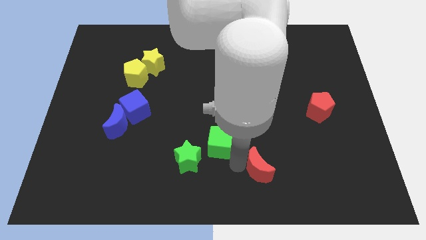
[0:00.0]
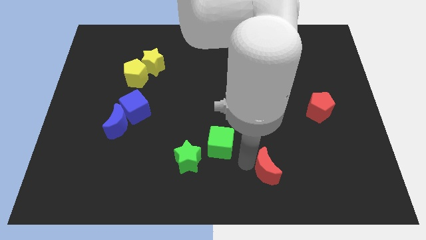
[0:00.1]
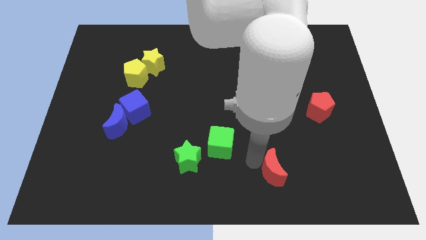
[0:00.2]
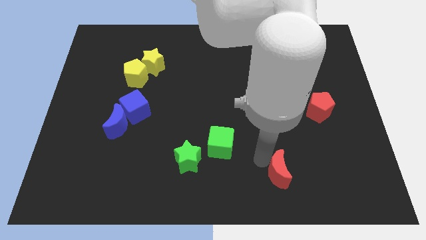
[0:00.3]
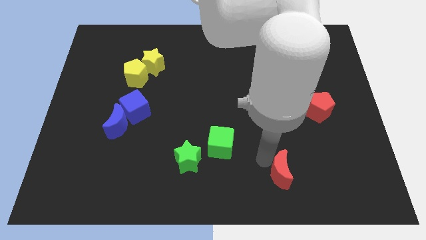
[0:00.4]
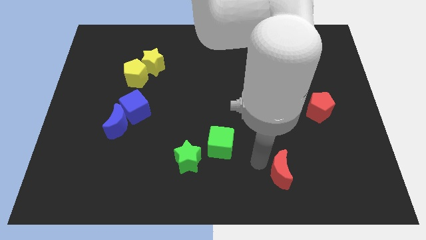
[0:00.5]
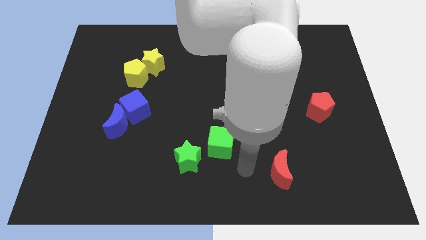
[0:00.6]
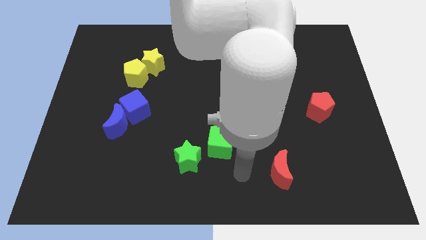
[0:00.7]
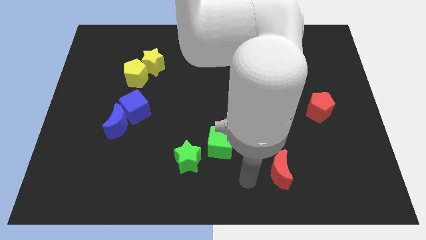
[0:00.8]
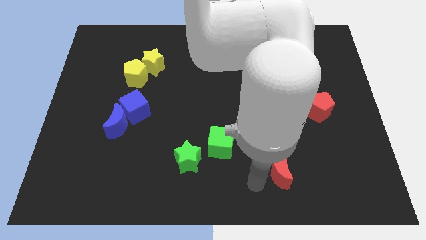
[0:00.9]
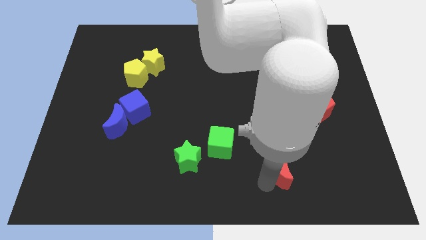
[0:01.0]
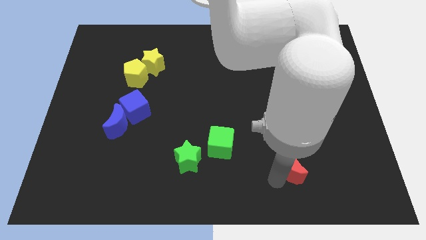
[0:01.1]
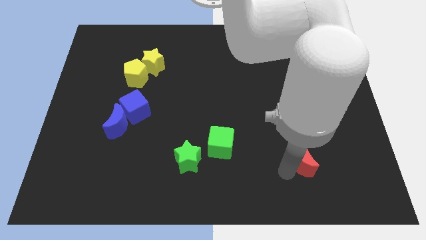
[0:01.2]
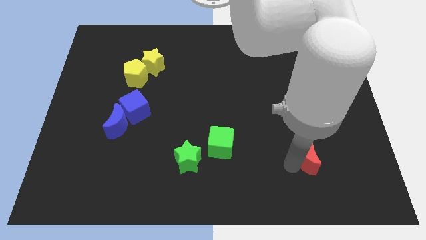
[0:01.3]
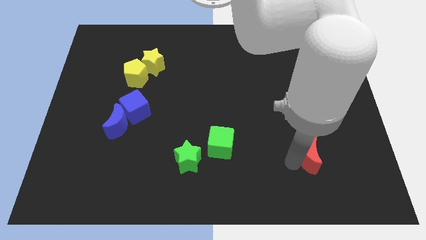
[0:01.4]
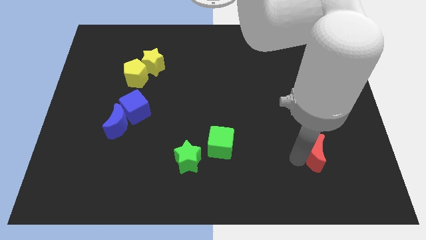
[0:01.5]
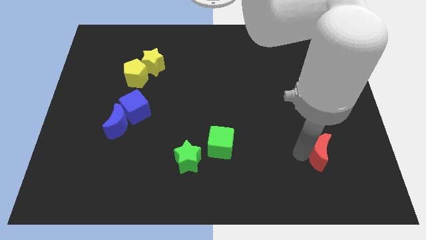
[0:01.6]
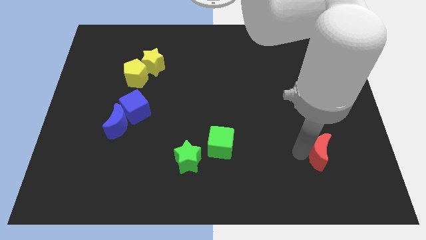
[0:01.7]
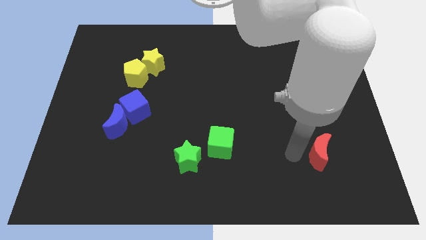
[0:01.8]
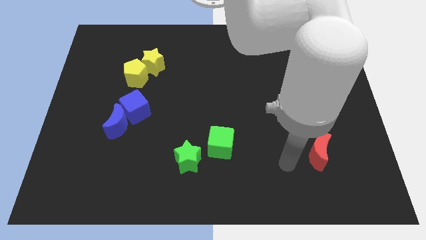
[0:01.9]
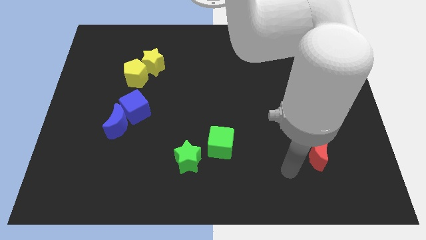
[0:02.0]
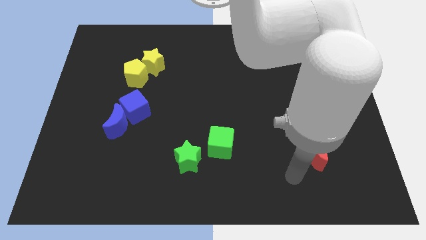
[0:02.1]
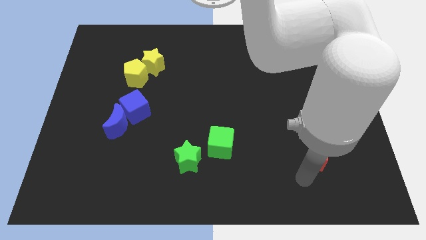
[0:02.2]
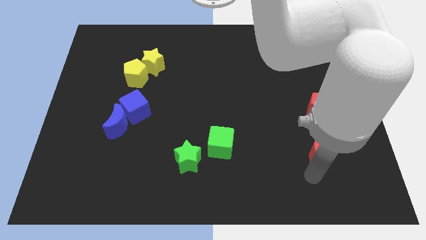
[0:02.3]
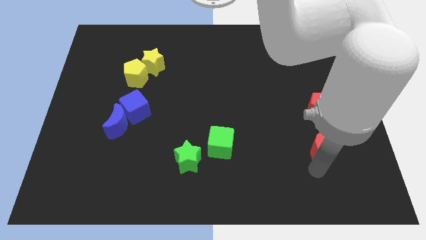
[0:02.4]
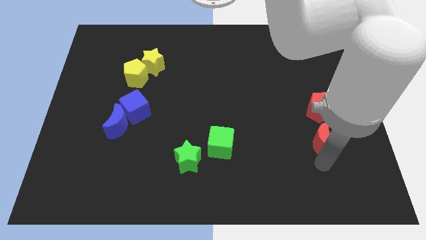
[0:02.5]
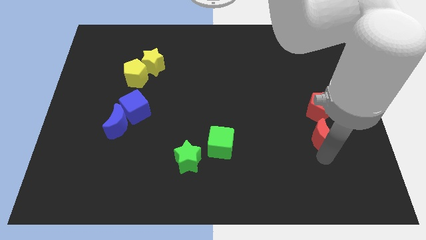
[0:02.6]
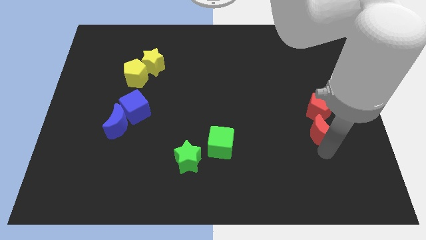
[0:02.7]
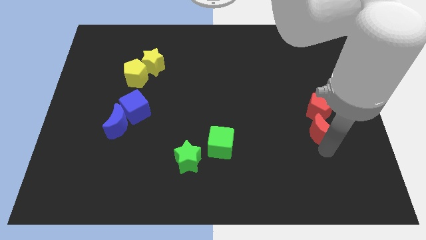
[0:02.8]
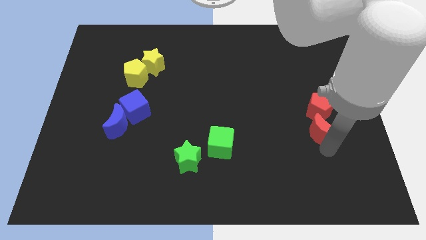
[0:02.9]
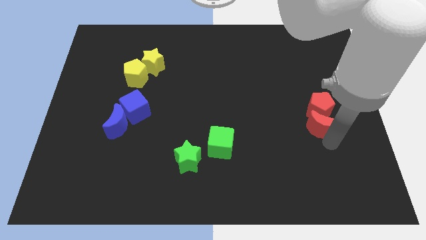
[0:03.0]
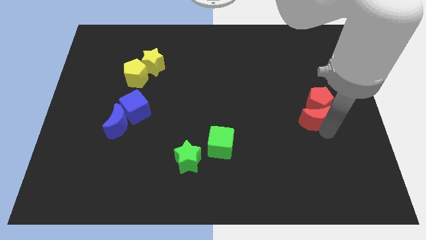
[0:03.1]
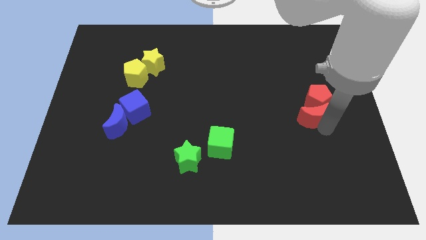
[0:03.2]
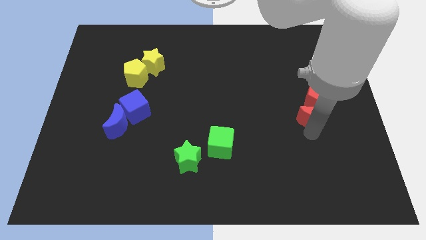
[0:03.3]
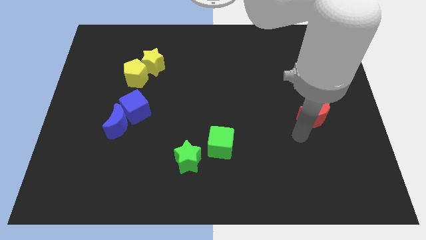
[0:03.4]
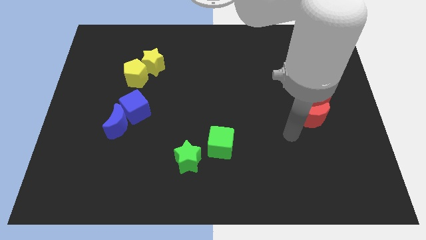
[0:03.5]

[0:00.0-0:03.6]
push the red blocks to the center right of the board

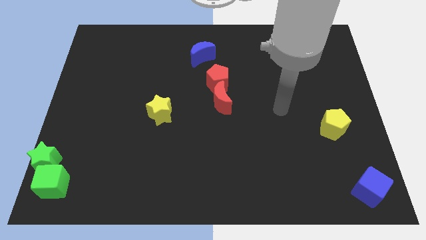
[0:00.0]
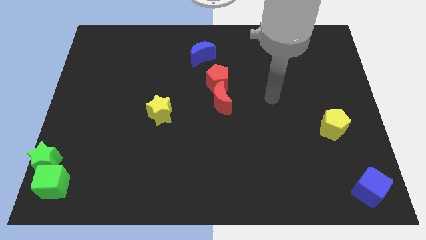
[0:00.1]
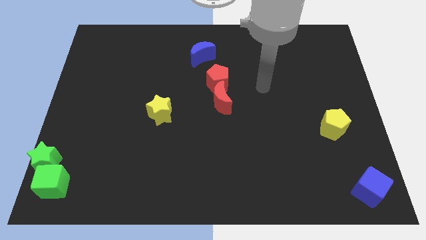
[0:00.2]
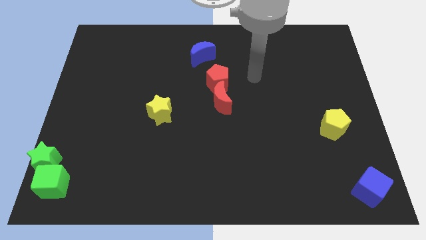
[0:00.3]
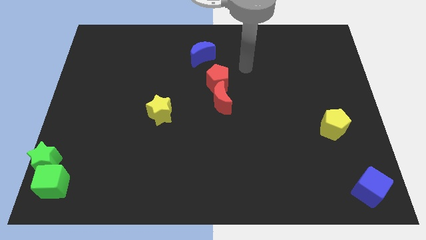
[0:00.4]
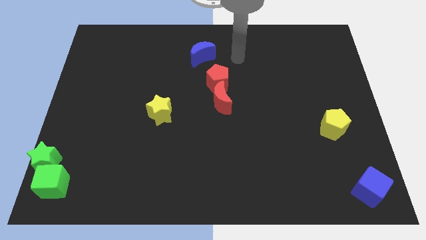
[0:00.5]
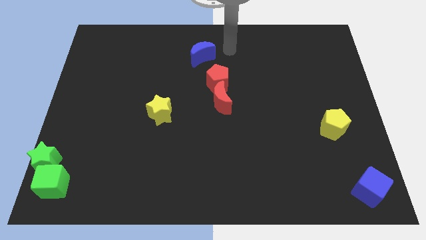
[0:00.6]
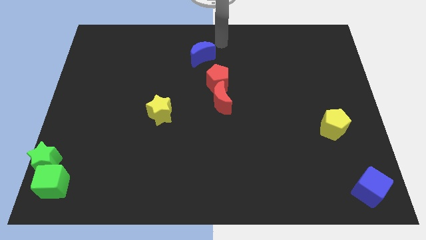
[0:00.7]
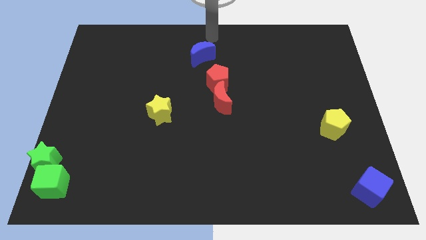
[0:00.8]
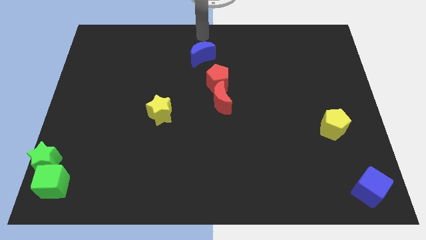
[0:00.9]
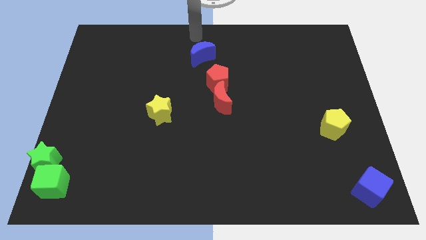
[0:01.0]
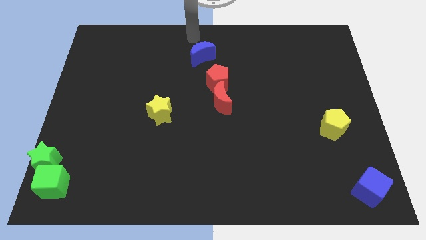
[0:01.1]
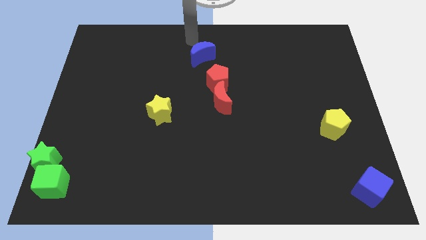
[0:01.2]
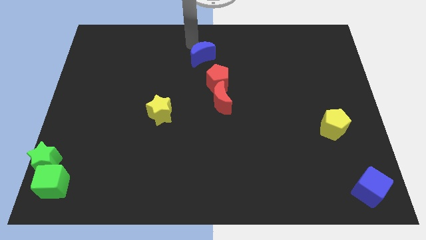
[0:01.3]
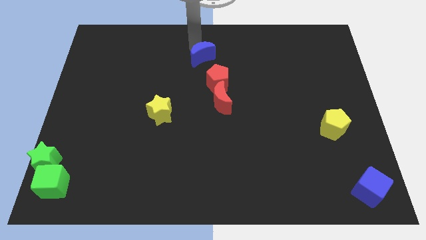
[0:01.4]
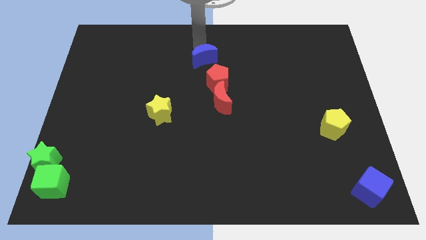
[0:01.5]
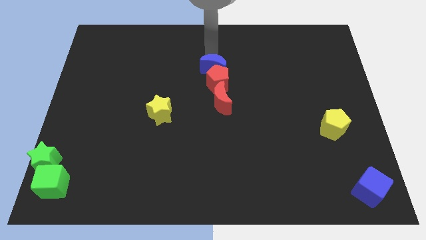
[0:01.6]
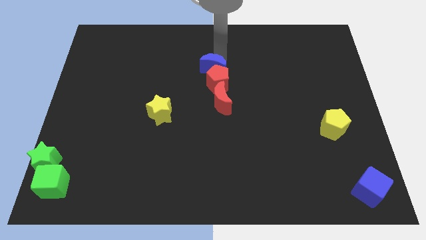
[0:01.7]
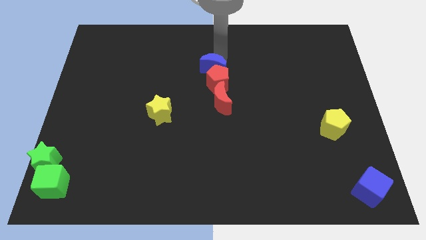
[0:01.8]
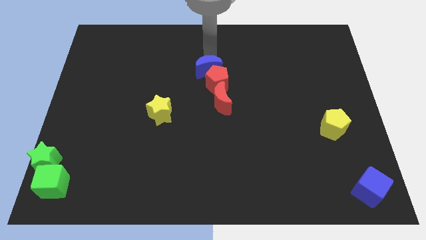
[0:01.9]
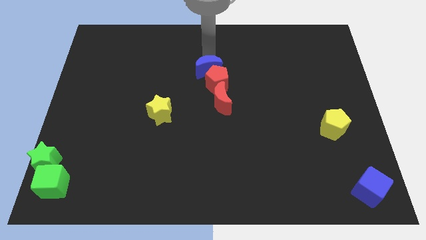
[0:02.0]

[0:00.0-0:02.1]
move the blue moon above the red pentagon

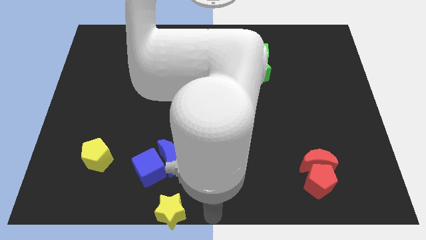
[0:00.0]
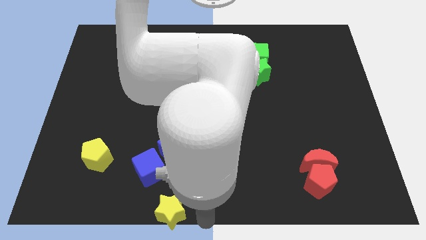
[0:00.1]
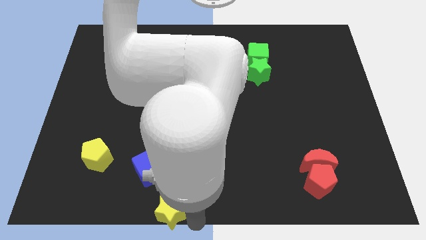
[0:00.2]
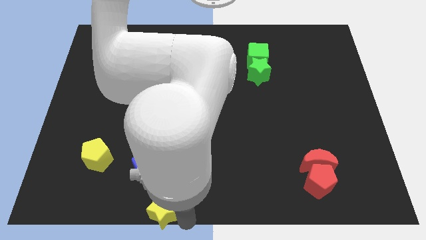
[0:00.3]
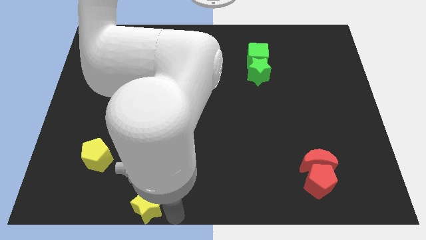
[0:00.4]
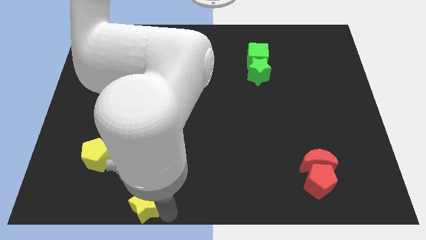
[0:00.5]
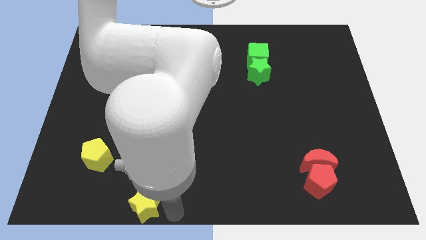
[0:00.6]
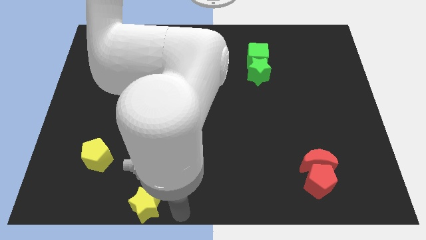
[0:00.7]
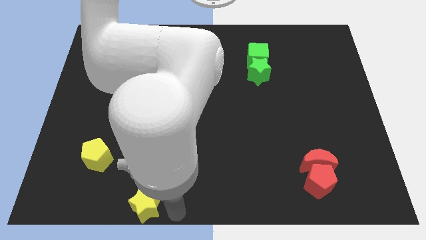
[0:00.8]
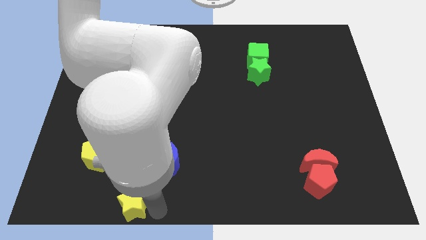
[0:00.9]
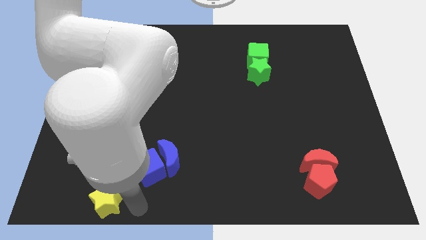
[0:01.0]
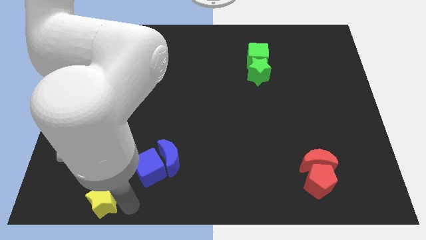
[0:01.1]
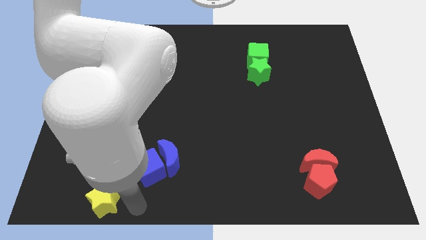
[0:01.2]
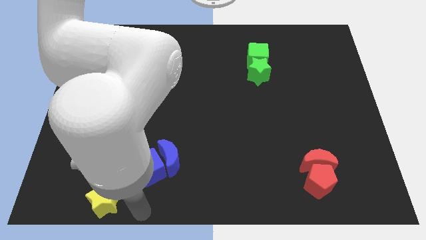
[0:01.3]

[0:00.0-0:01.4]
push the yellow star to the left

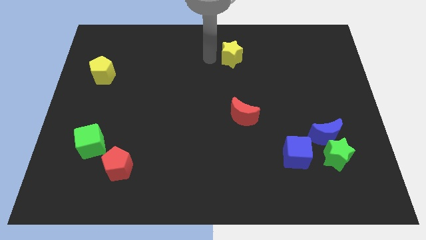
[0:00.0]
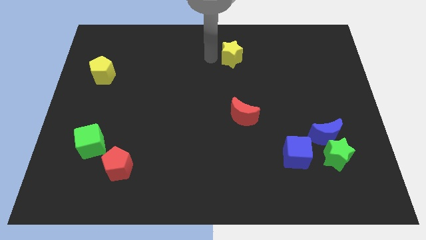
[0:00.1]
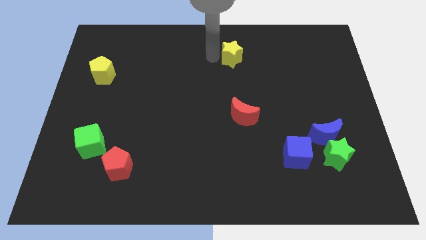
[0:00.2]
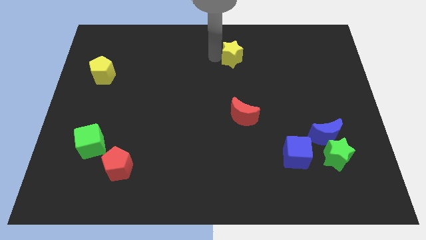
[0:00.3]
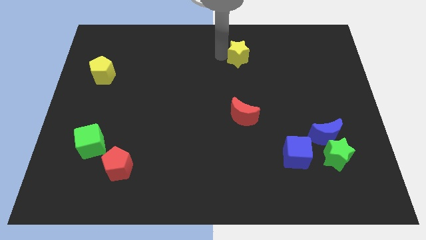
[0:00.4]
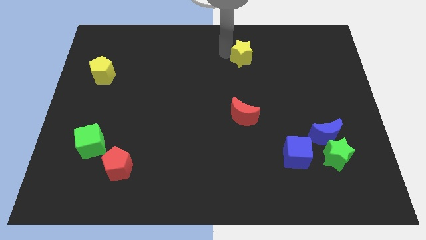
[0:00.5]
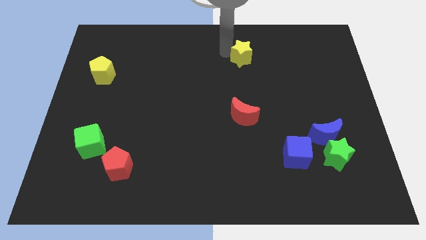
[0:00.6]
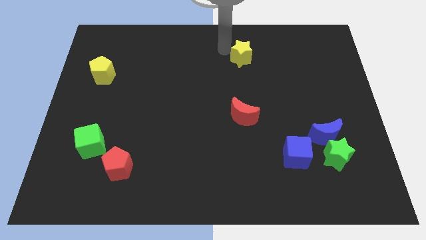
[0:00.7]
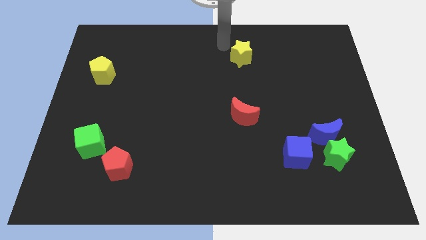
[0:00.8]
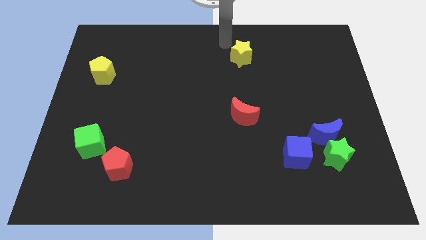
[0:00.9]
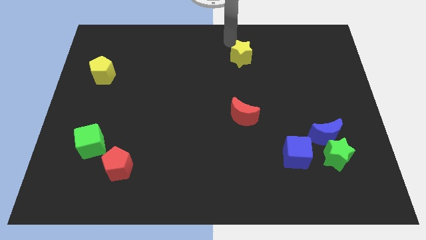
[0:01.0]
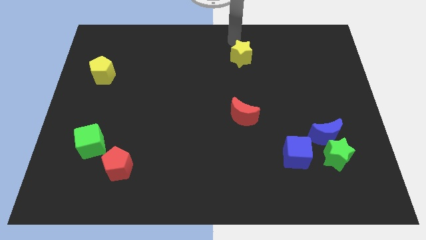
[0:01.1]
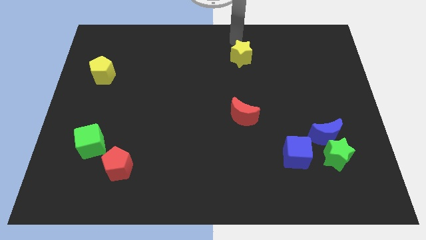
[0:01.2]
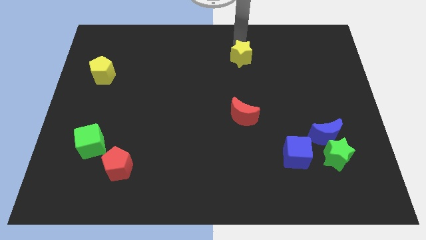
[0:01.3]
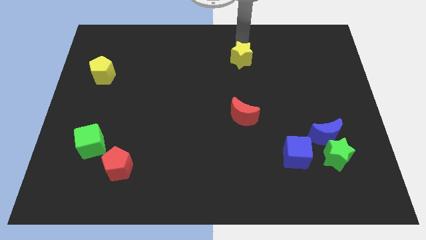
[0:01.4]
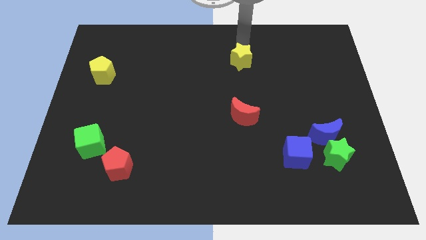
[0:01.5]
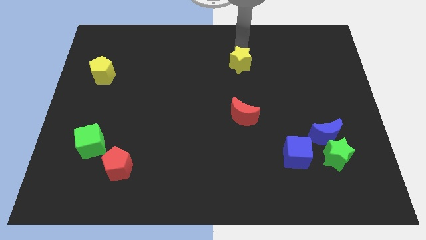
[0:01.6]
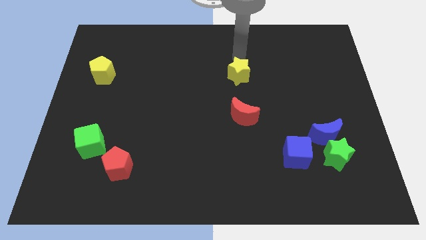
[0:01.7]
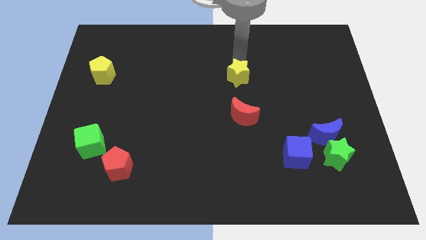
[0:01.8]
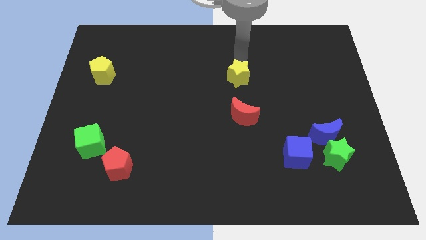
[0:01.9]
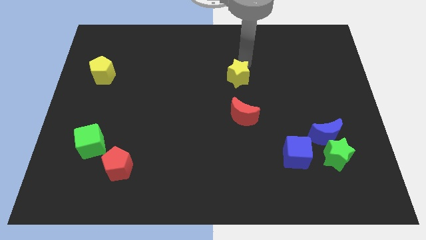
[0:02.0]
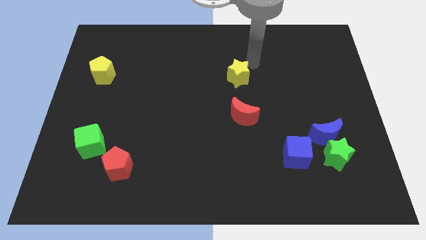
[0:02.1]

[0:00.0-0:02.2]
push the yellow star towards the center of the board
